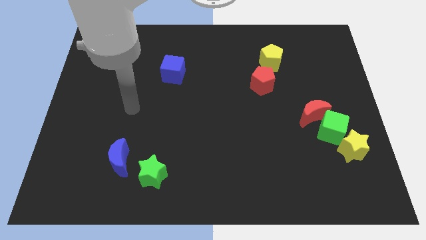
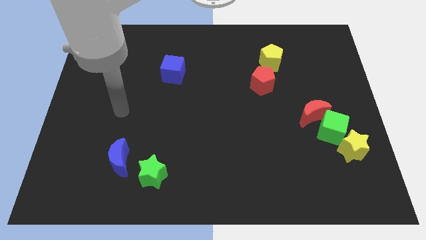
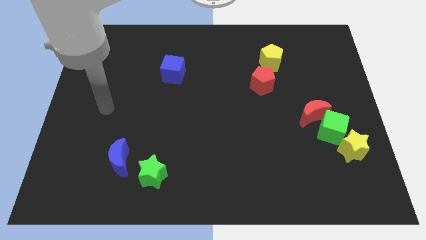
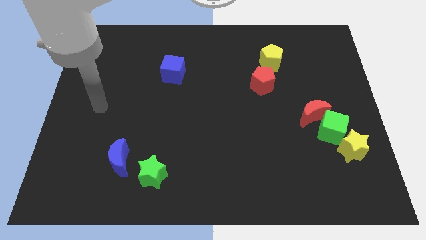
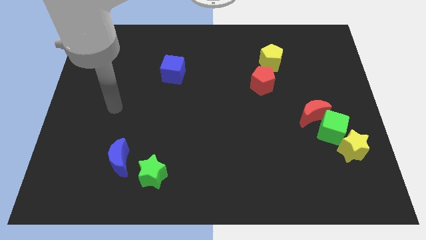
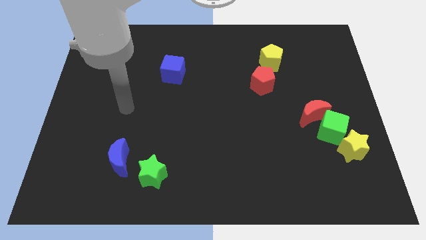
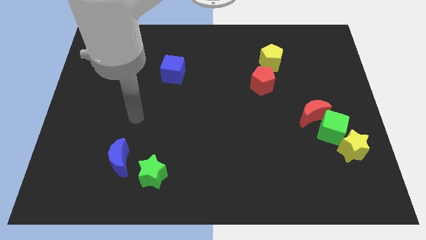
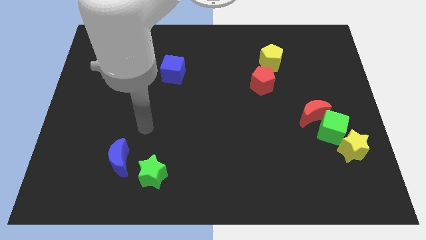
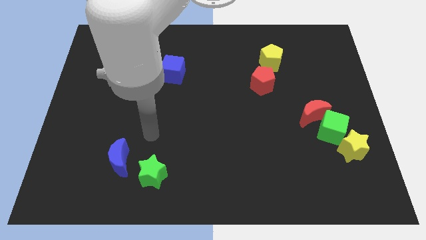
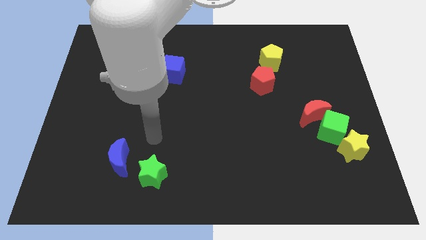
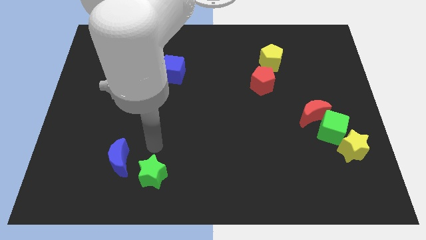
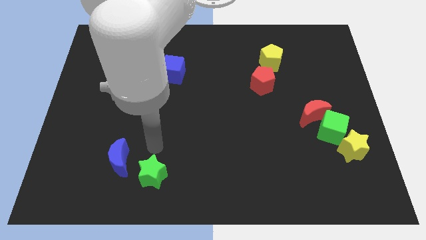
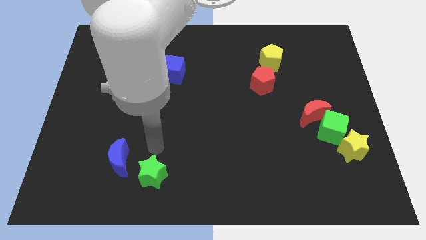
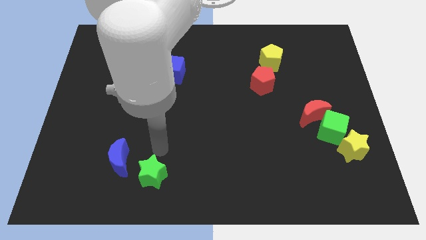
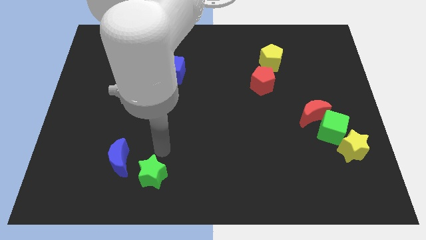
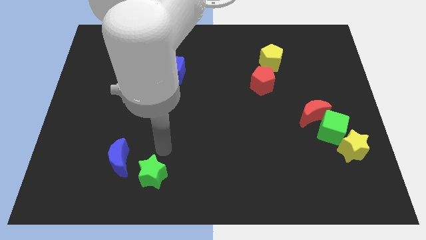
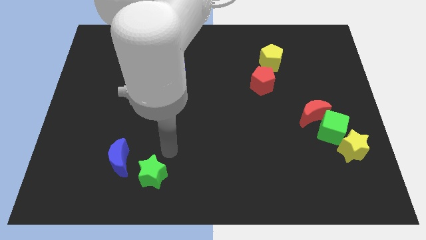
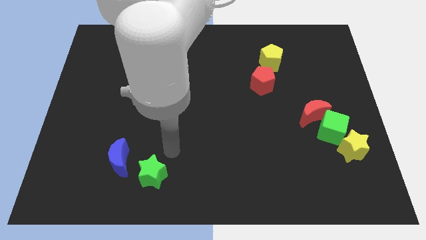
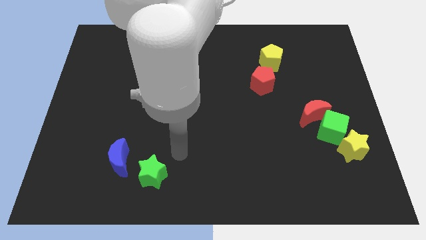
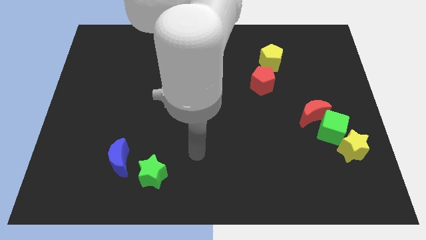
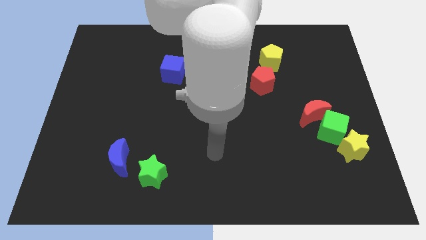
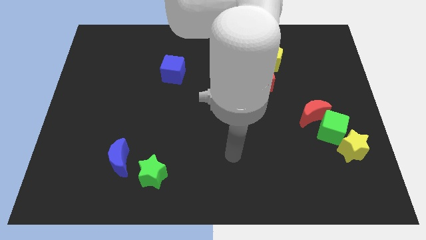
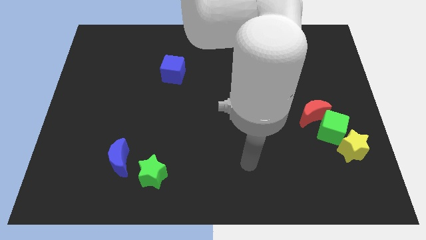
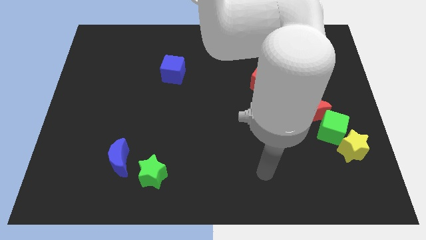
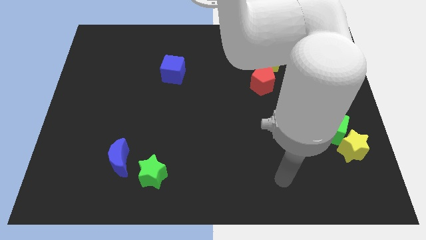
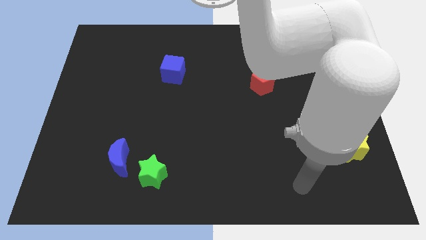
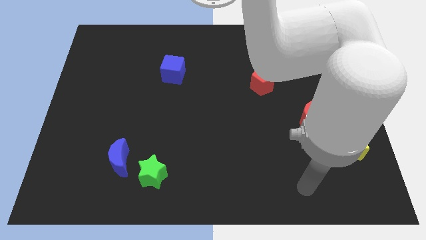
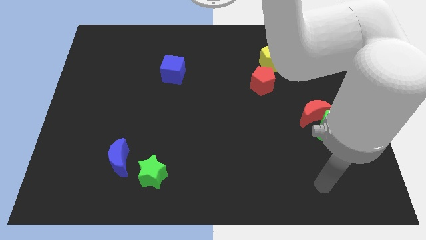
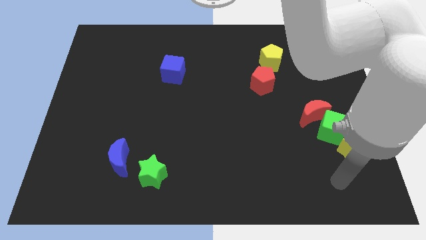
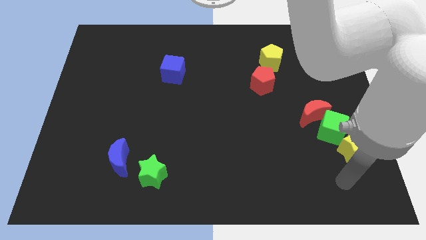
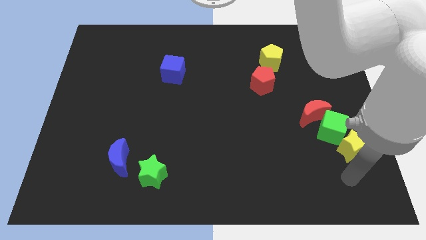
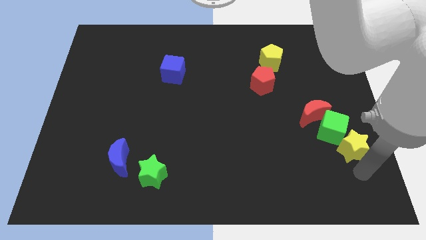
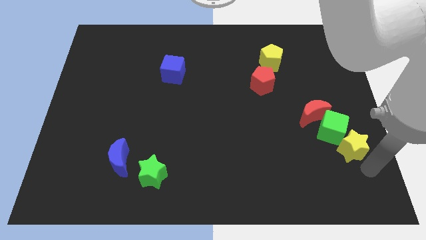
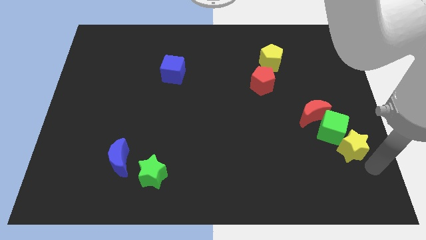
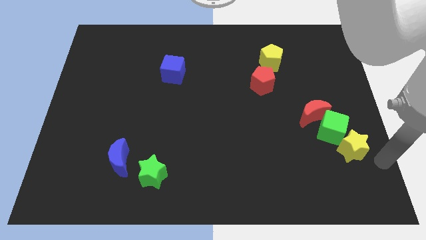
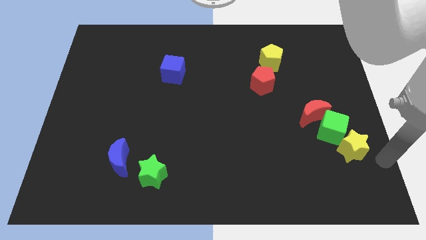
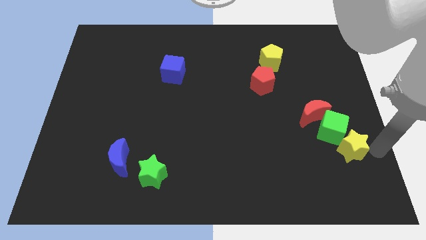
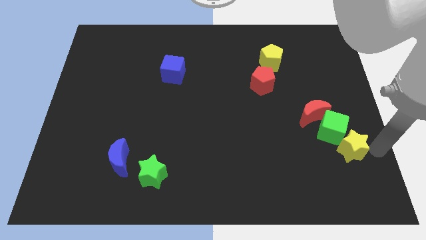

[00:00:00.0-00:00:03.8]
point your hand to the right of the yellow star

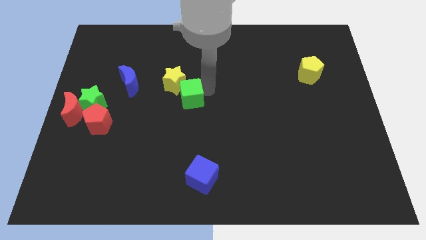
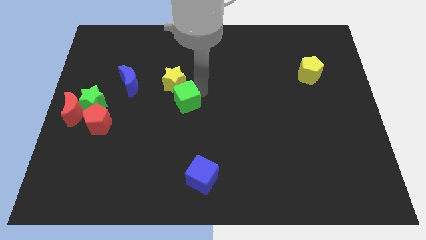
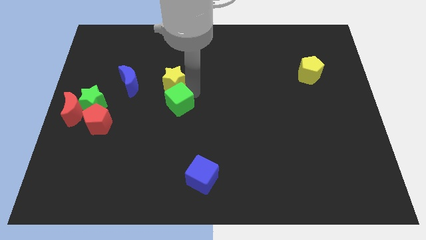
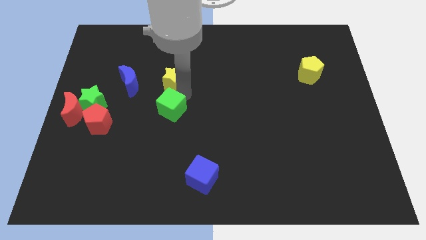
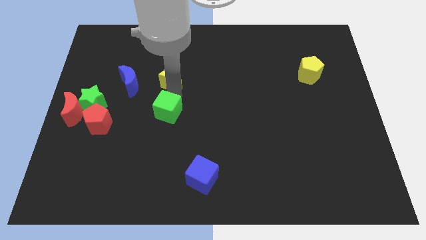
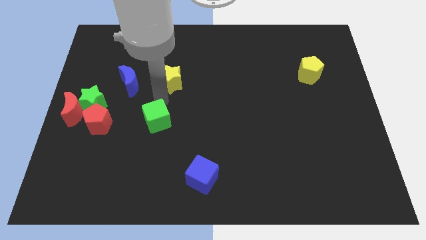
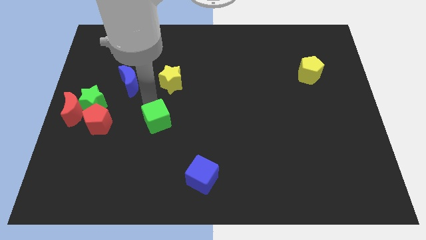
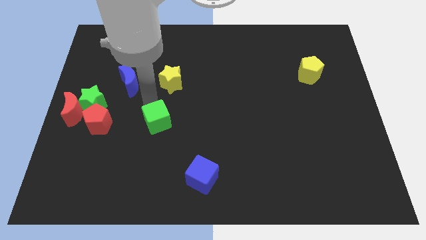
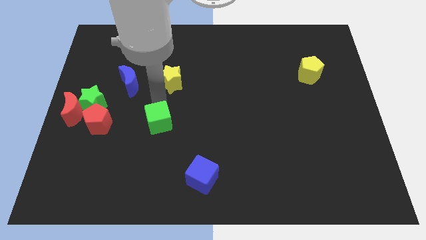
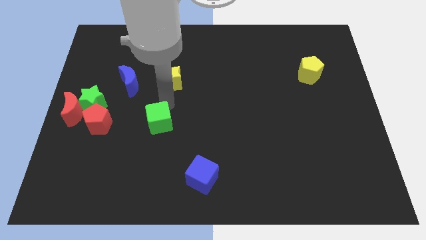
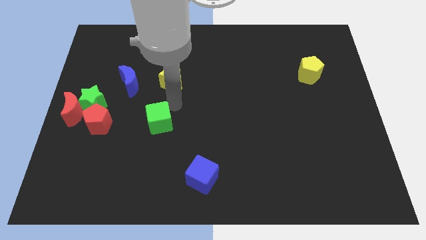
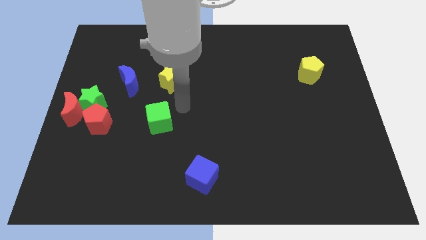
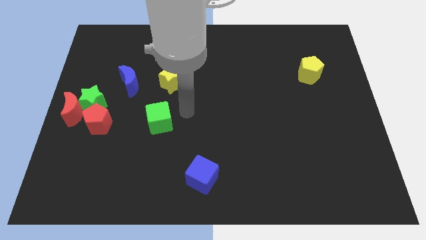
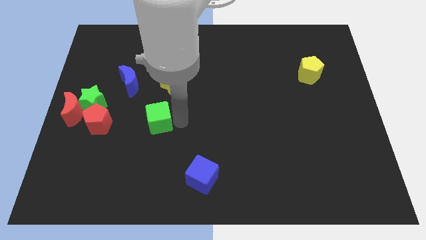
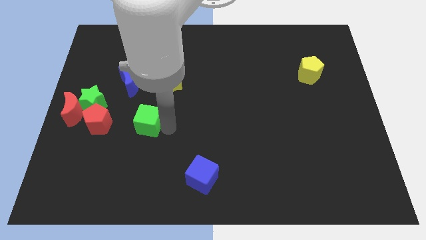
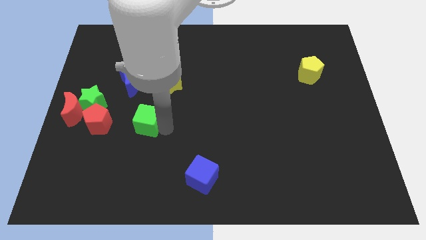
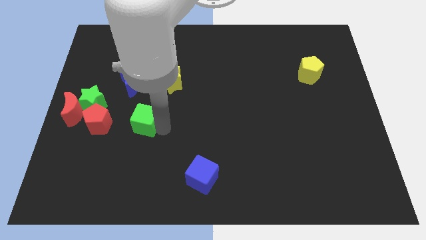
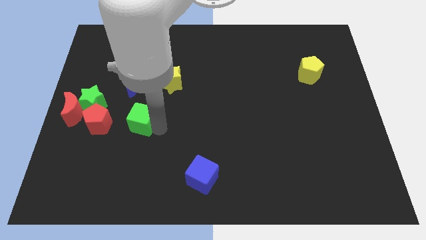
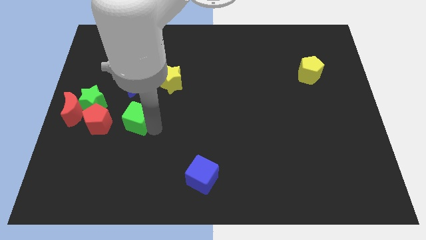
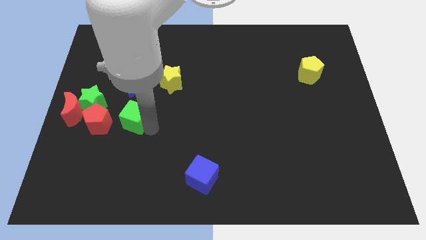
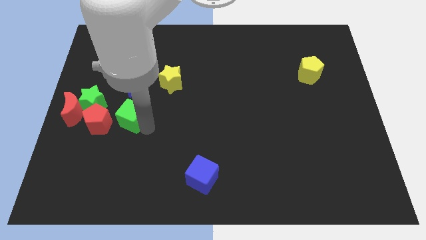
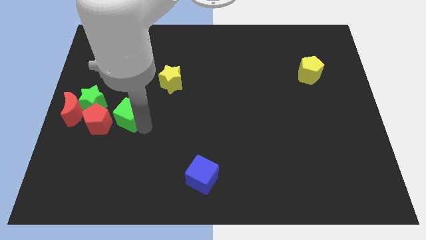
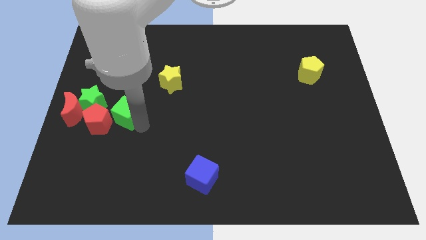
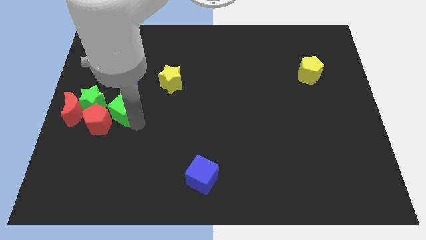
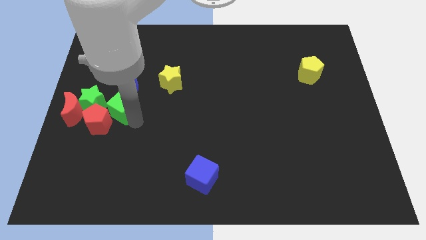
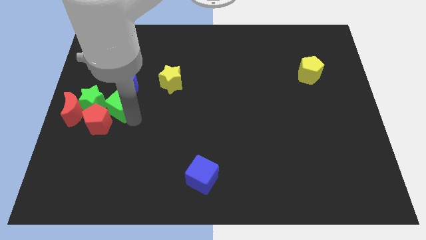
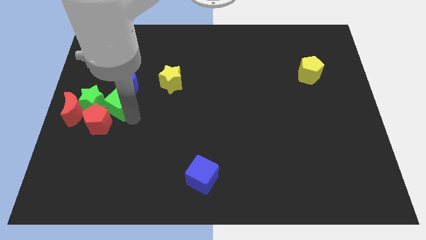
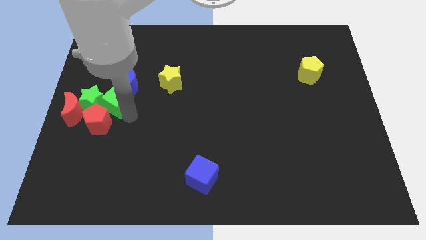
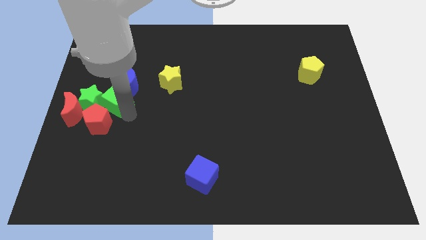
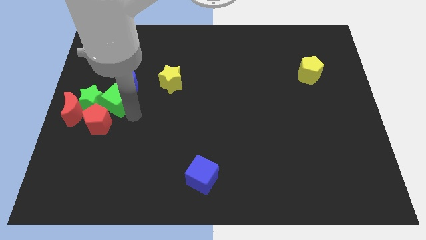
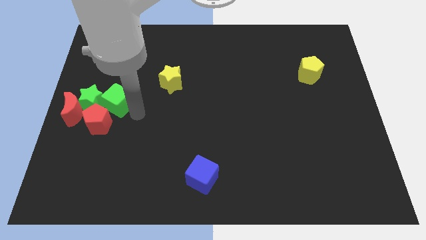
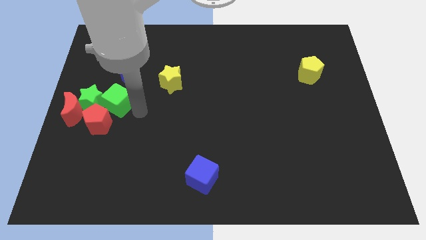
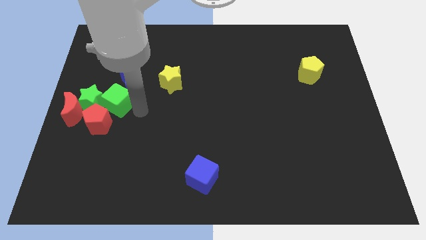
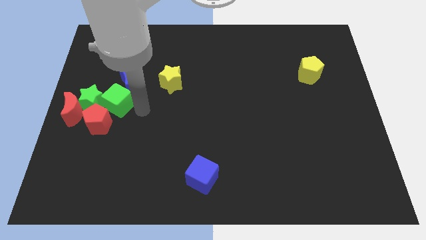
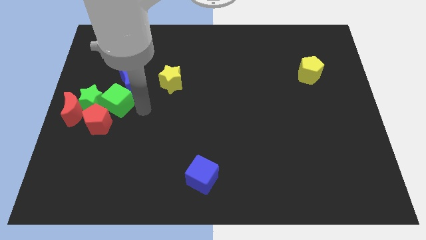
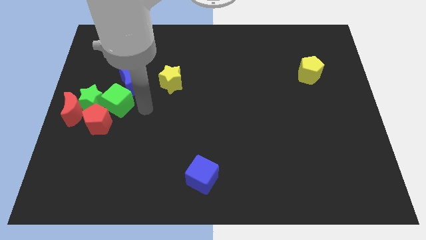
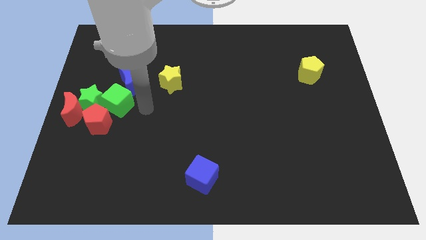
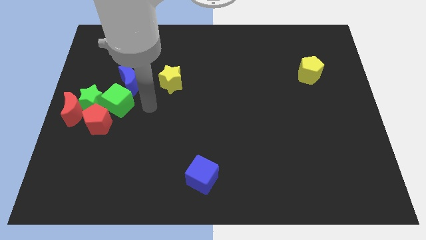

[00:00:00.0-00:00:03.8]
push the green cube into the green star

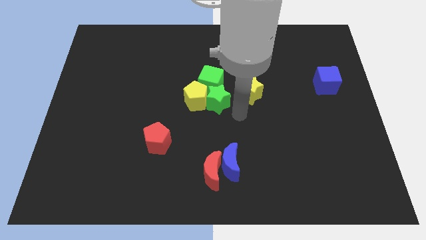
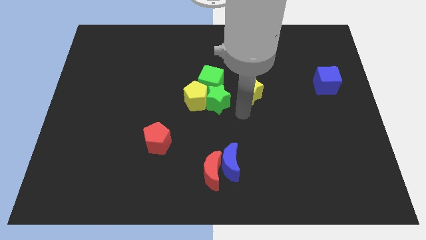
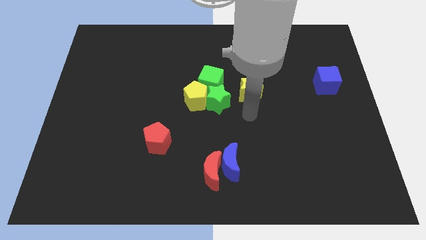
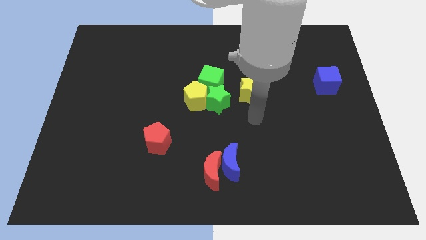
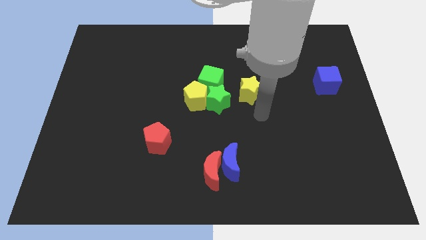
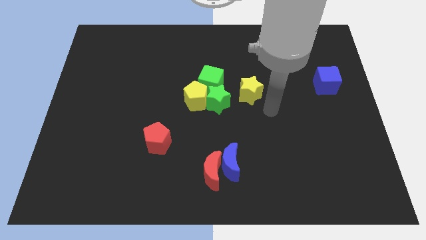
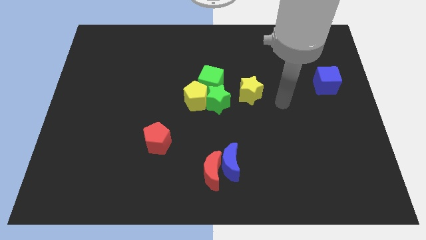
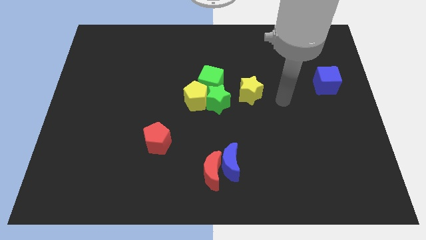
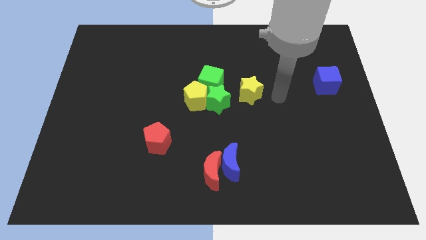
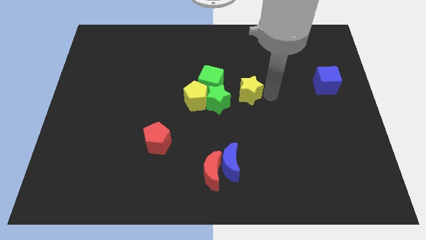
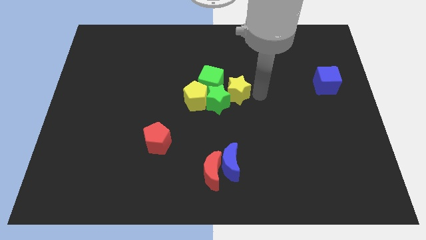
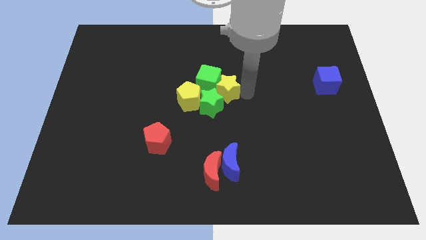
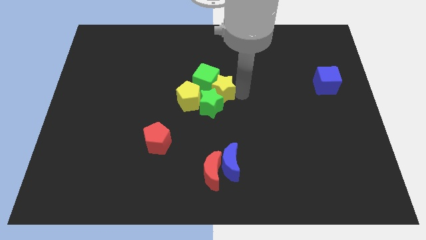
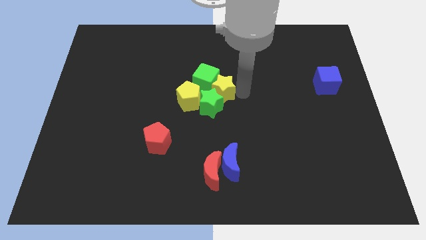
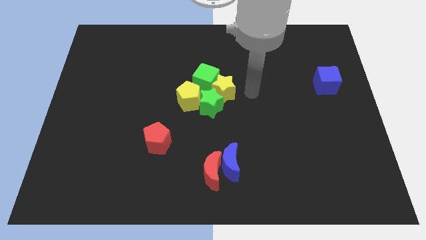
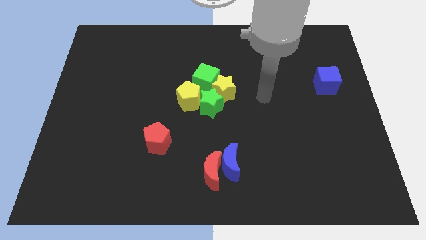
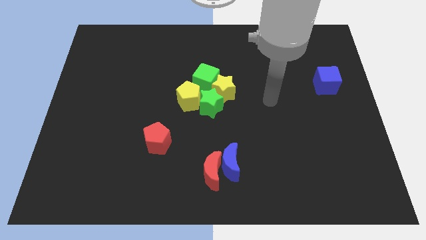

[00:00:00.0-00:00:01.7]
move the yellow star to the right of the green cube
